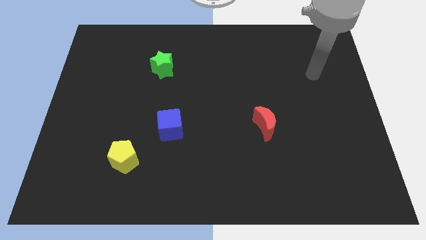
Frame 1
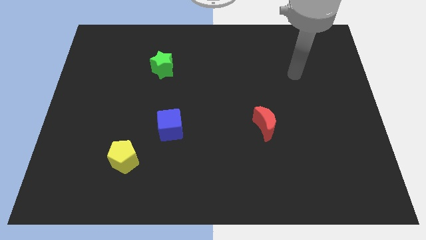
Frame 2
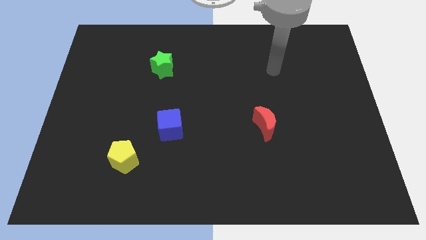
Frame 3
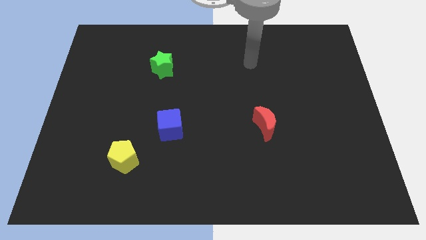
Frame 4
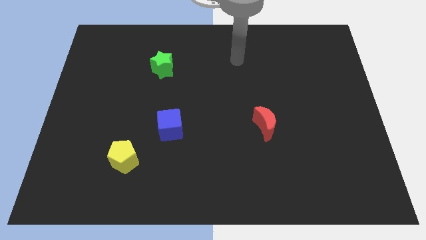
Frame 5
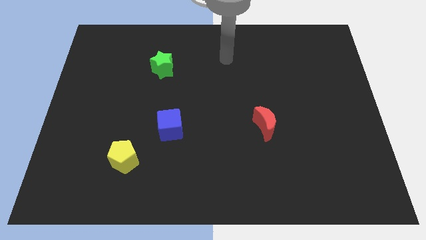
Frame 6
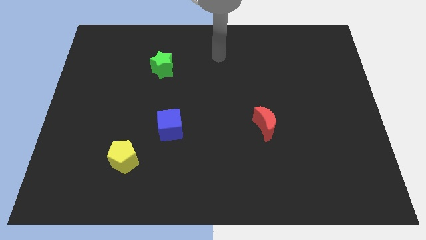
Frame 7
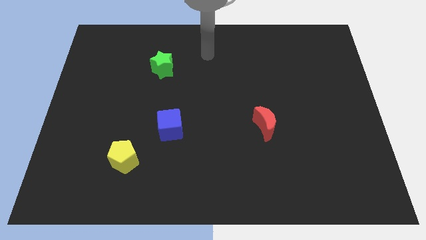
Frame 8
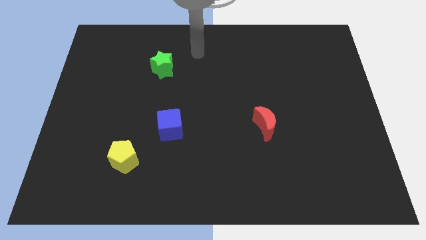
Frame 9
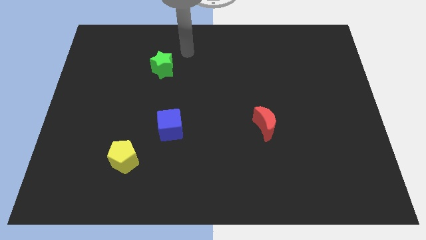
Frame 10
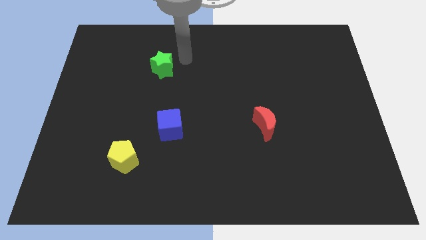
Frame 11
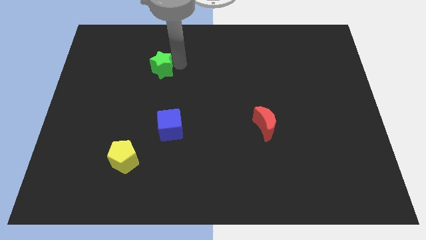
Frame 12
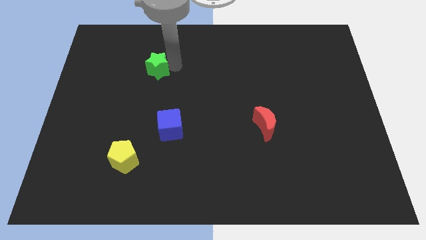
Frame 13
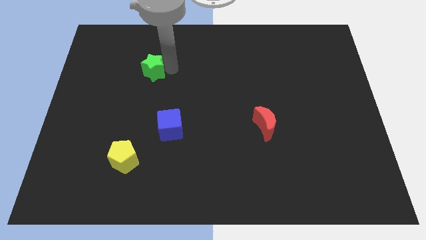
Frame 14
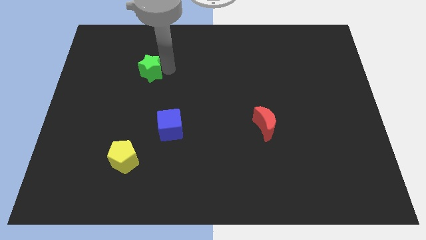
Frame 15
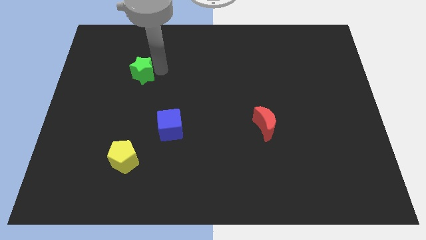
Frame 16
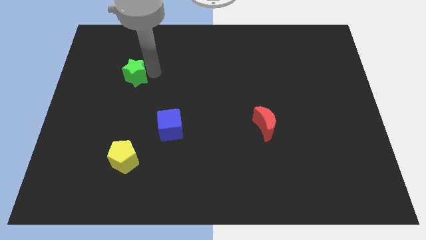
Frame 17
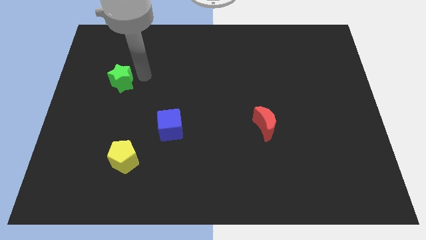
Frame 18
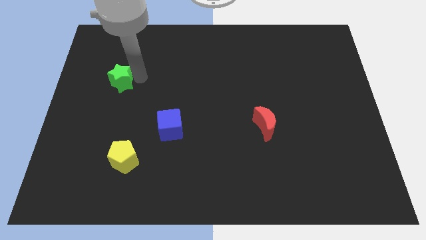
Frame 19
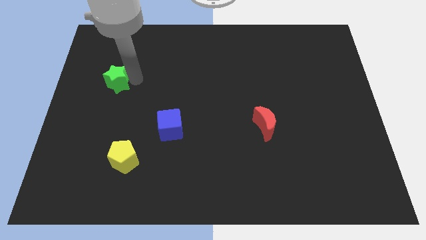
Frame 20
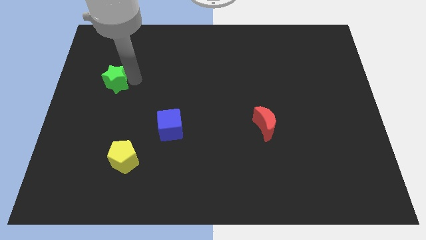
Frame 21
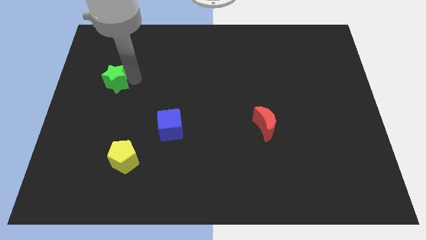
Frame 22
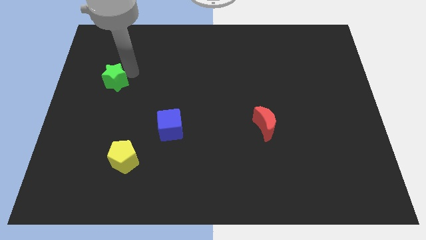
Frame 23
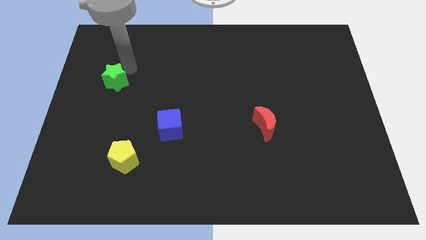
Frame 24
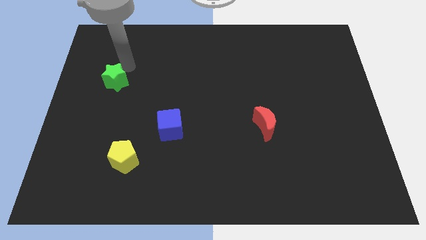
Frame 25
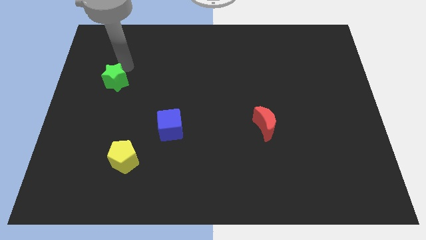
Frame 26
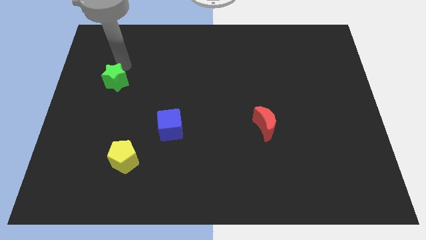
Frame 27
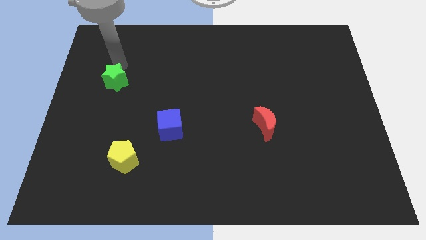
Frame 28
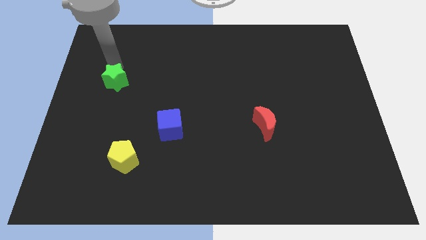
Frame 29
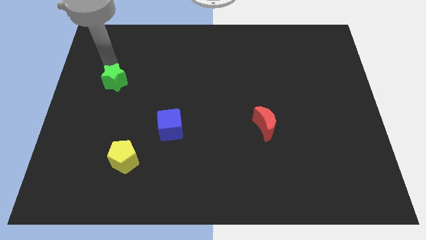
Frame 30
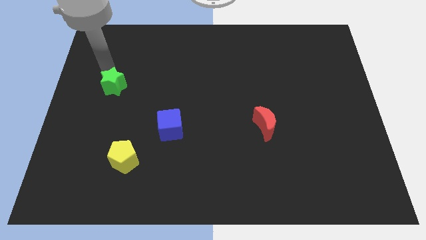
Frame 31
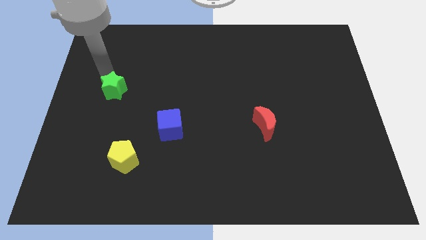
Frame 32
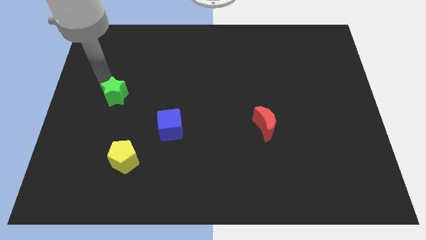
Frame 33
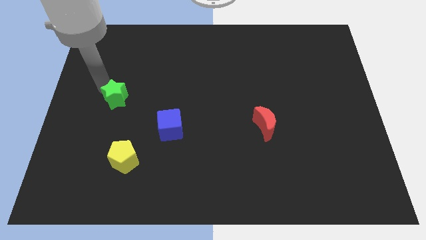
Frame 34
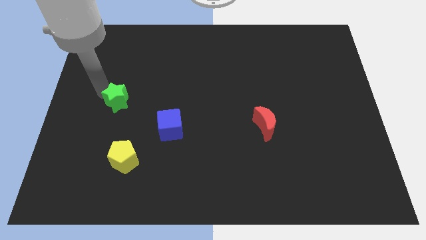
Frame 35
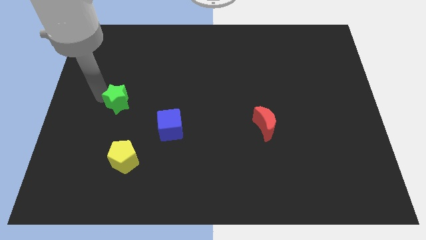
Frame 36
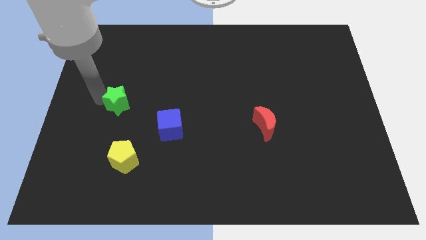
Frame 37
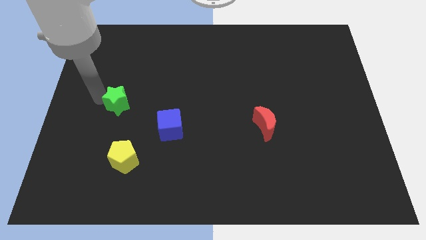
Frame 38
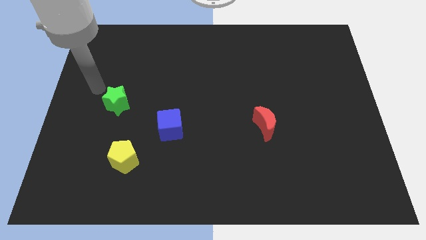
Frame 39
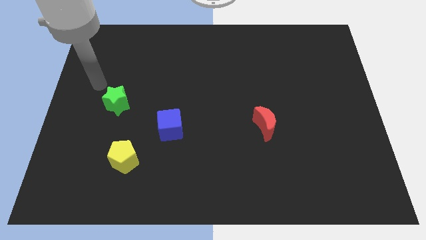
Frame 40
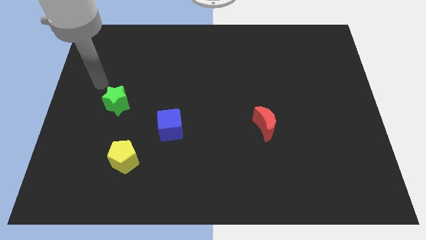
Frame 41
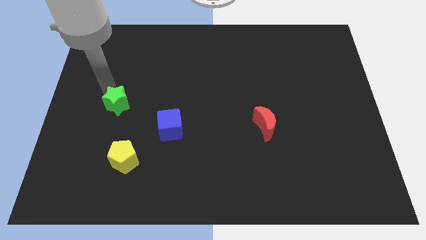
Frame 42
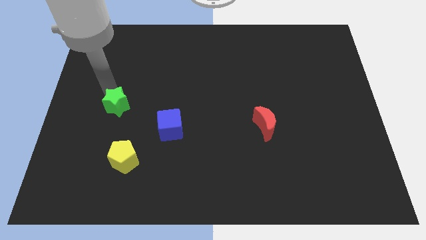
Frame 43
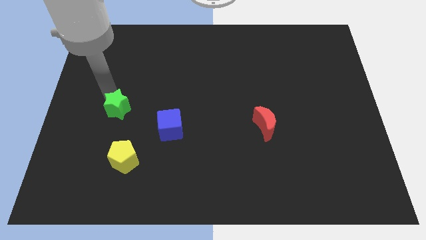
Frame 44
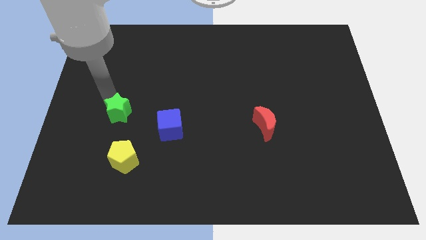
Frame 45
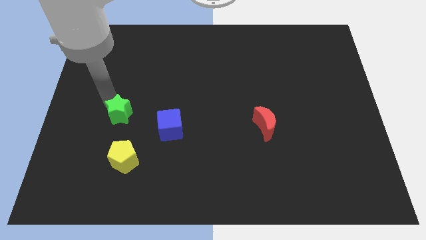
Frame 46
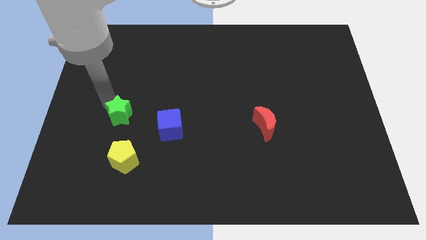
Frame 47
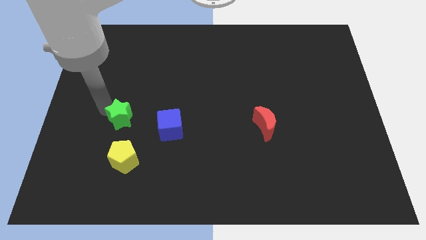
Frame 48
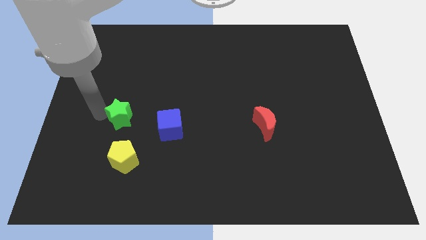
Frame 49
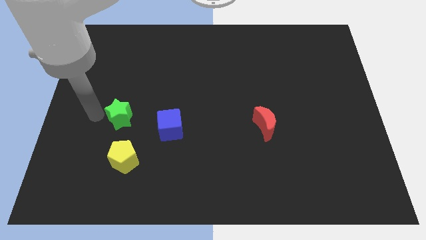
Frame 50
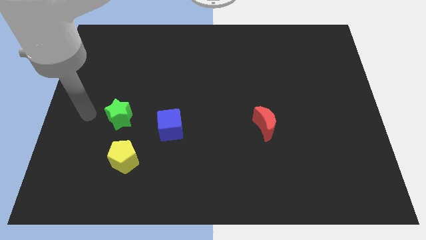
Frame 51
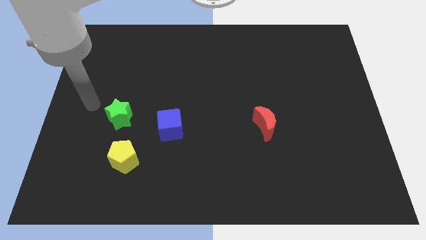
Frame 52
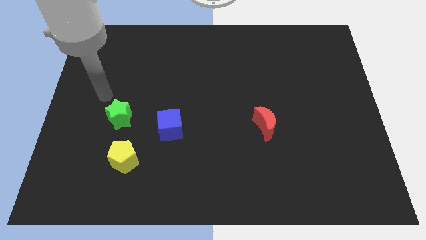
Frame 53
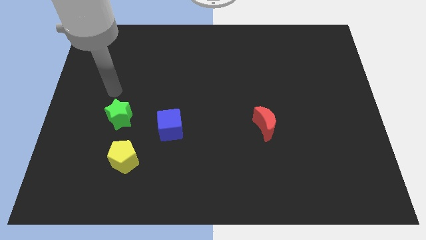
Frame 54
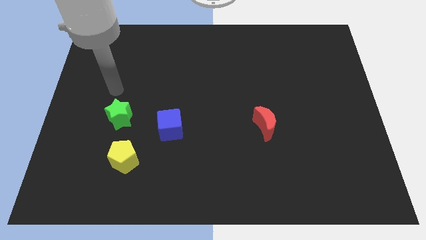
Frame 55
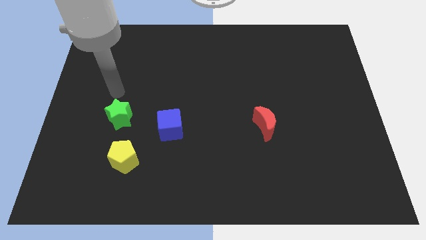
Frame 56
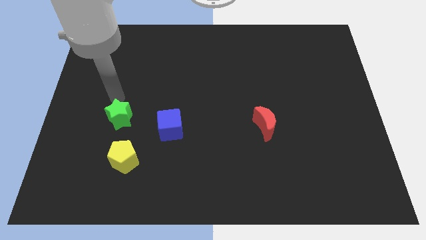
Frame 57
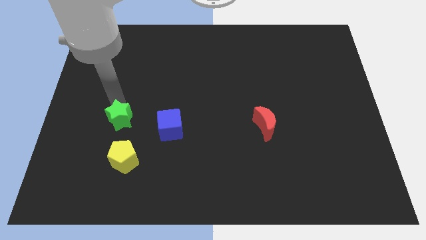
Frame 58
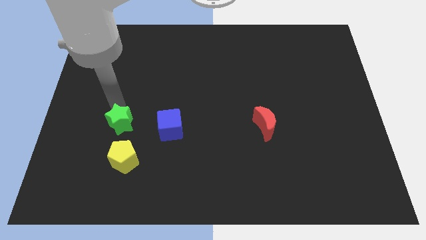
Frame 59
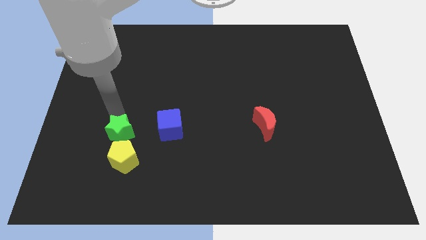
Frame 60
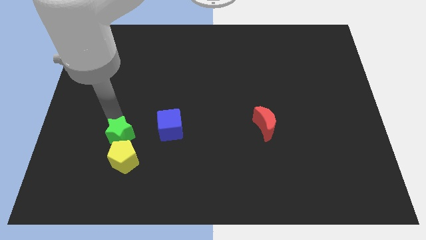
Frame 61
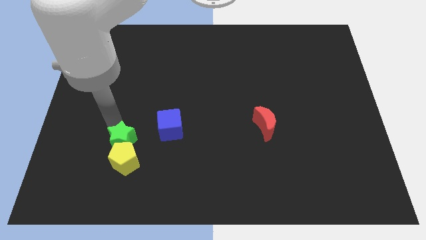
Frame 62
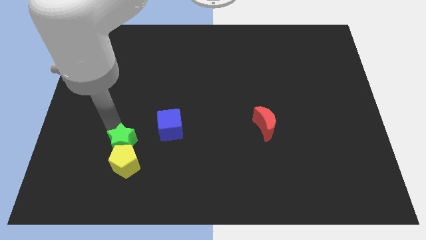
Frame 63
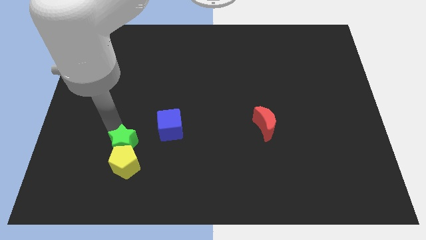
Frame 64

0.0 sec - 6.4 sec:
slide the star towards the yellow pentagon

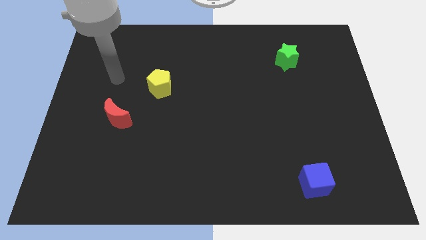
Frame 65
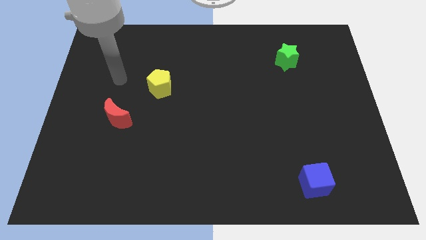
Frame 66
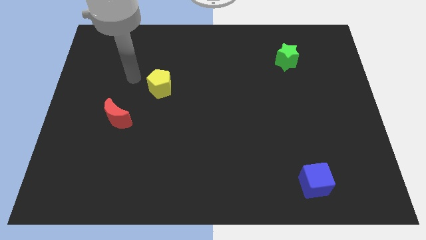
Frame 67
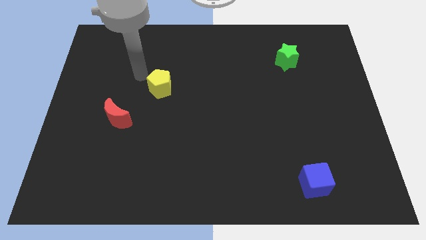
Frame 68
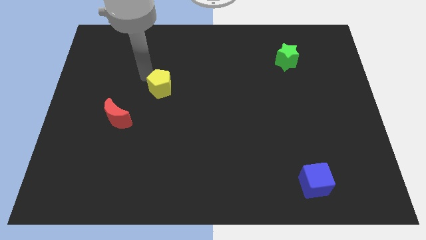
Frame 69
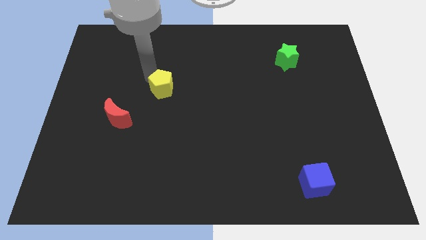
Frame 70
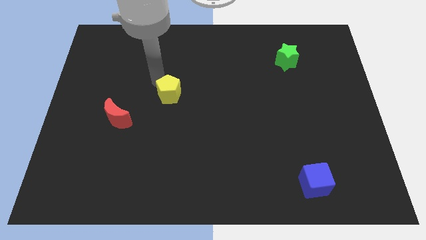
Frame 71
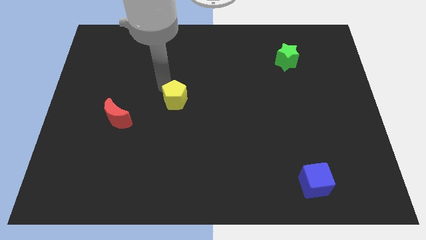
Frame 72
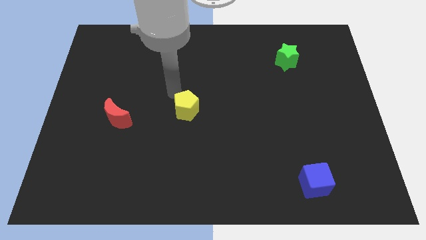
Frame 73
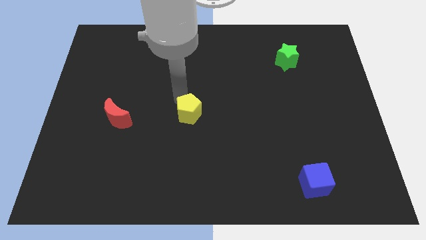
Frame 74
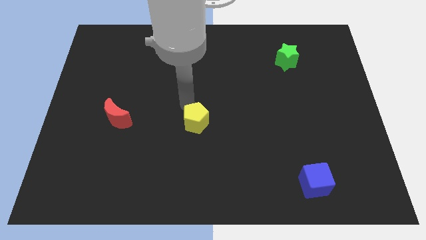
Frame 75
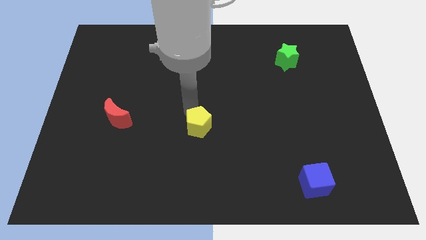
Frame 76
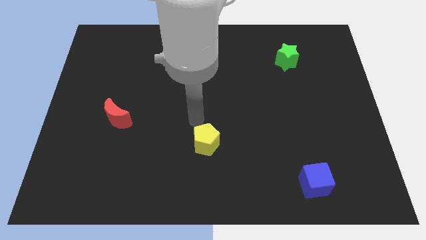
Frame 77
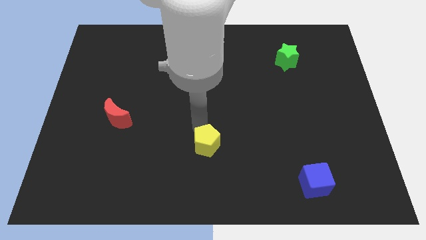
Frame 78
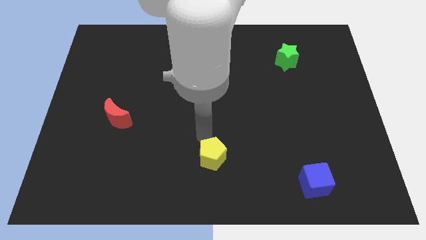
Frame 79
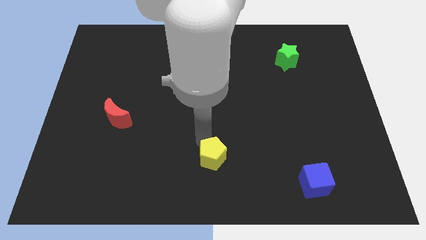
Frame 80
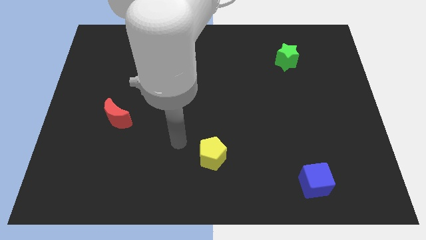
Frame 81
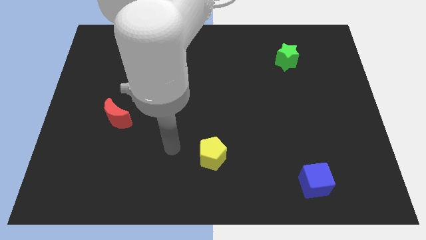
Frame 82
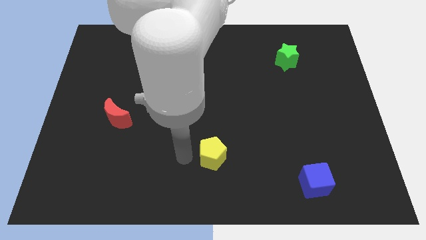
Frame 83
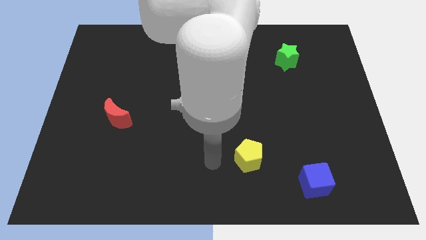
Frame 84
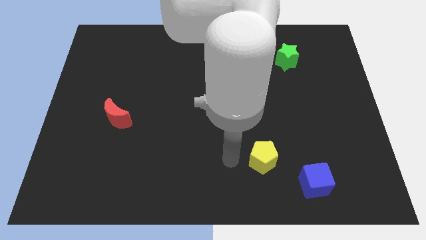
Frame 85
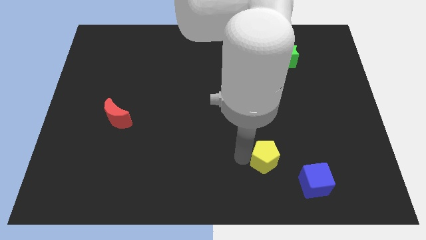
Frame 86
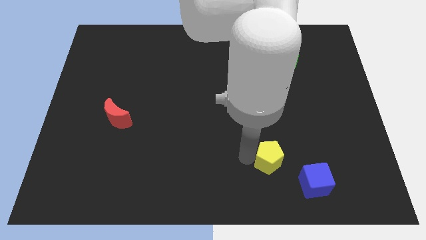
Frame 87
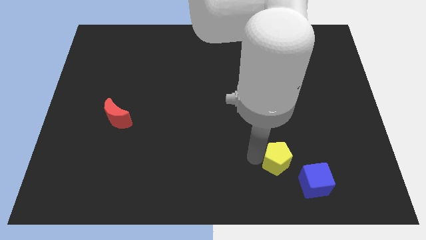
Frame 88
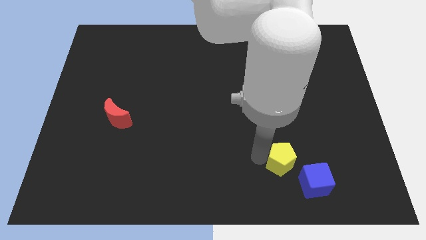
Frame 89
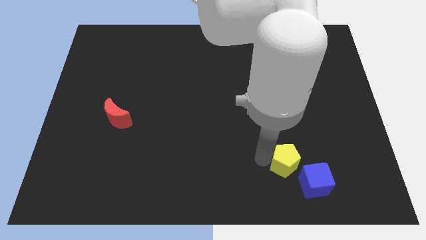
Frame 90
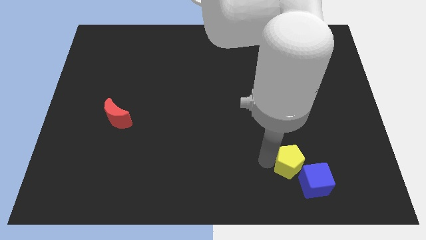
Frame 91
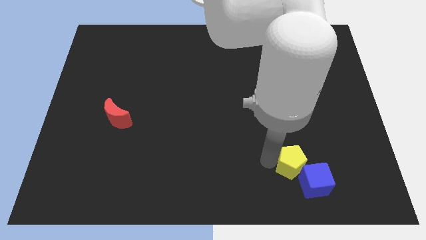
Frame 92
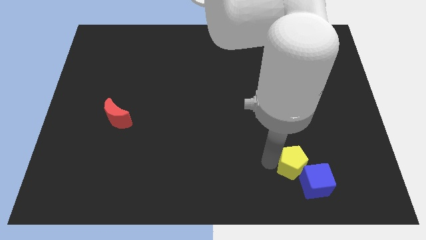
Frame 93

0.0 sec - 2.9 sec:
put the pentagon to the blue cube
